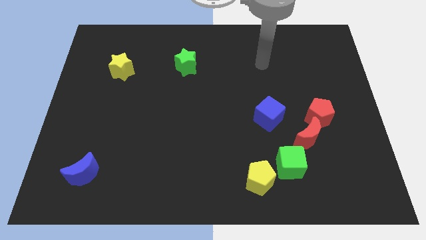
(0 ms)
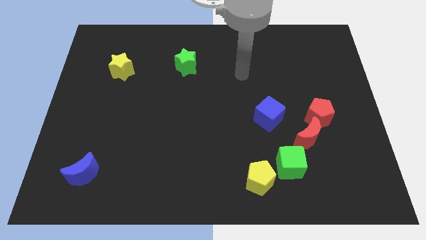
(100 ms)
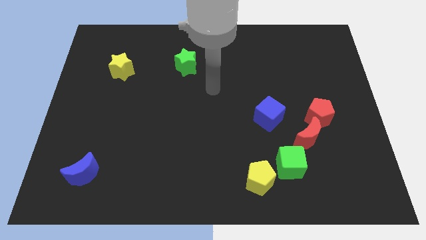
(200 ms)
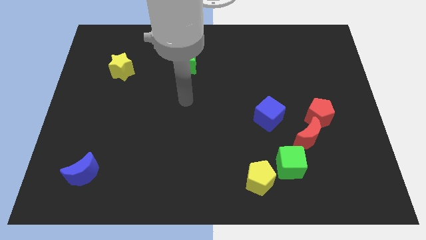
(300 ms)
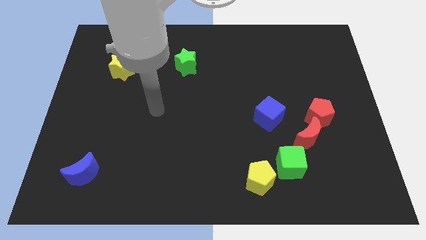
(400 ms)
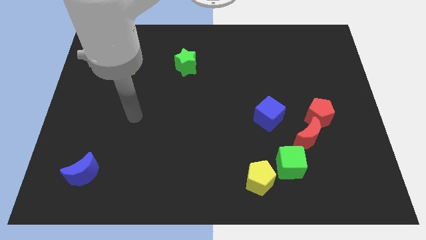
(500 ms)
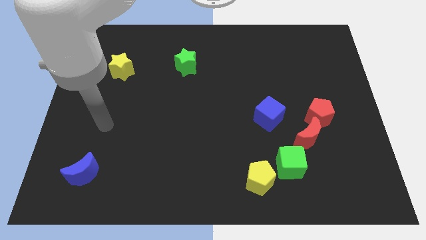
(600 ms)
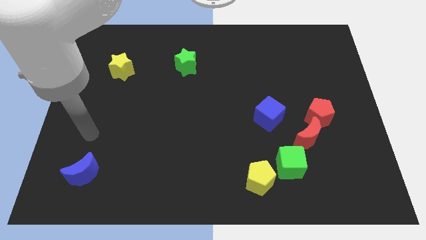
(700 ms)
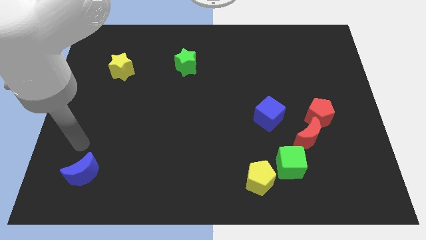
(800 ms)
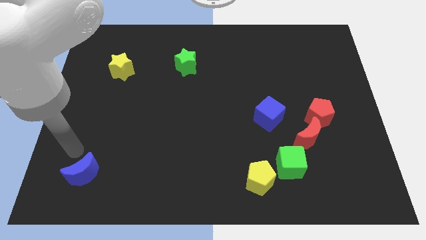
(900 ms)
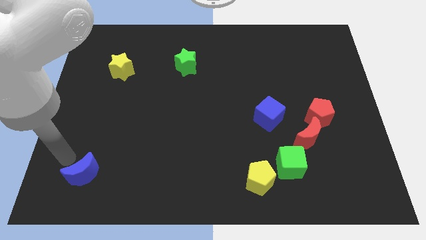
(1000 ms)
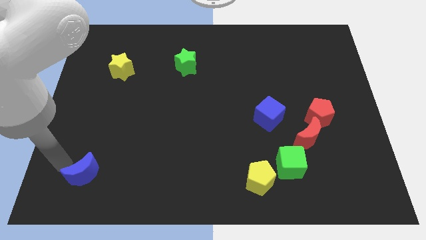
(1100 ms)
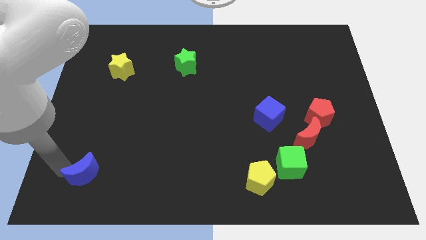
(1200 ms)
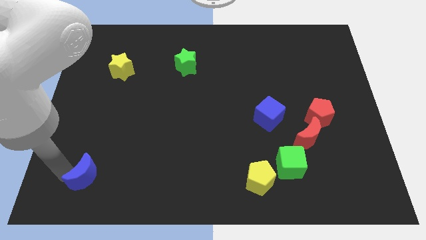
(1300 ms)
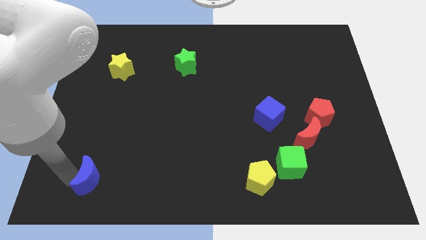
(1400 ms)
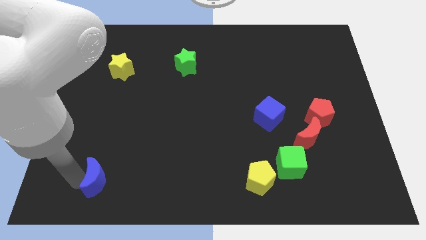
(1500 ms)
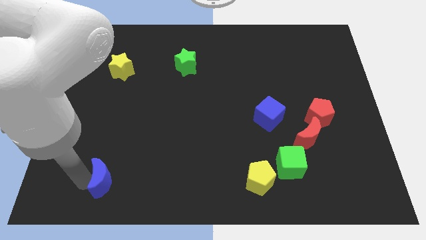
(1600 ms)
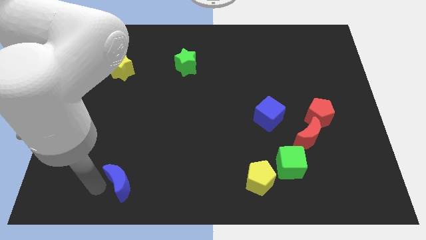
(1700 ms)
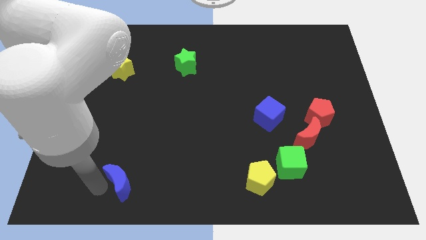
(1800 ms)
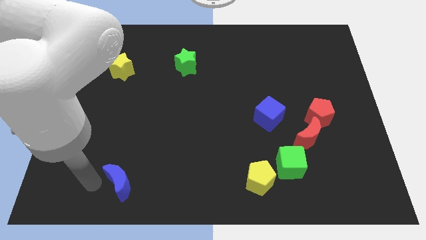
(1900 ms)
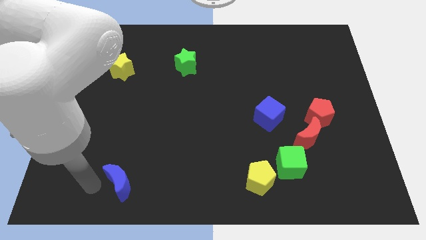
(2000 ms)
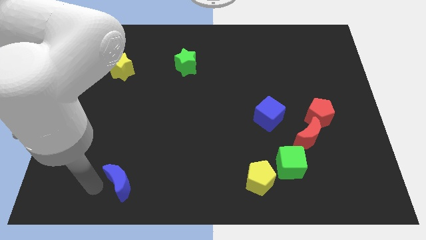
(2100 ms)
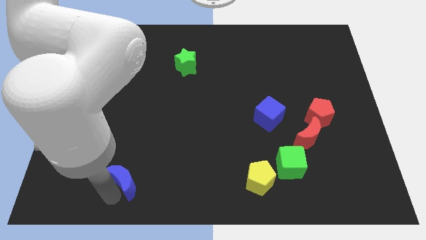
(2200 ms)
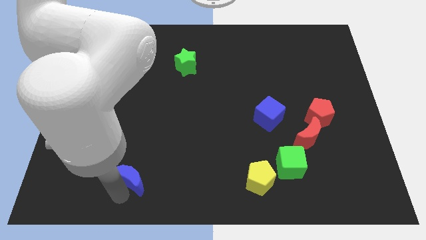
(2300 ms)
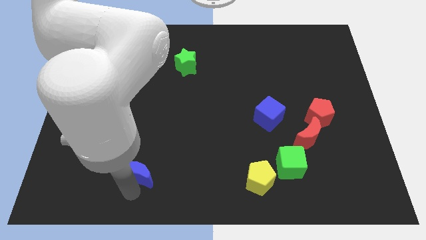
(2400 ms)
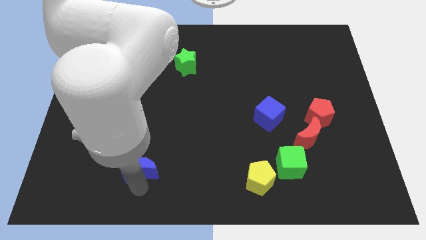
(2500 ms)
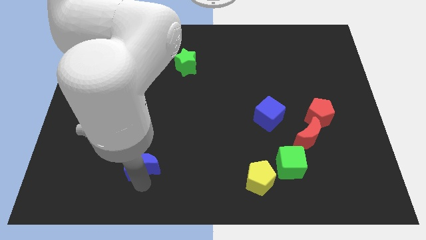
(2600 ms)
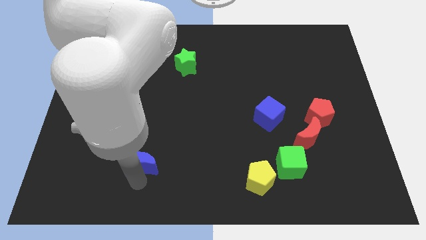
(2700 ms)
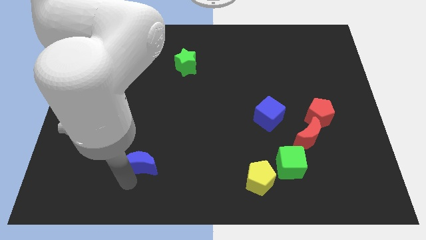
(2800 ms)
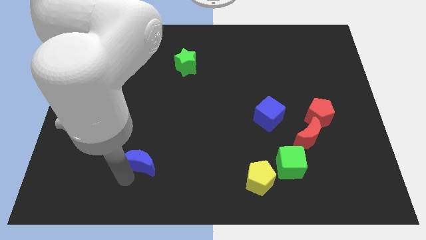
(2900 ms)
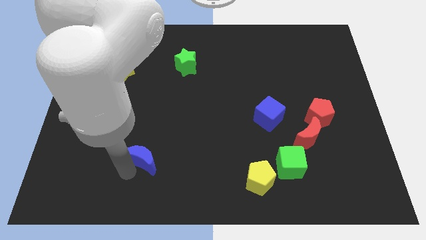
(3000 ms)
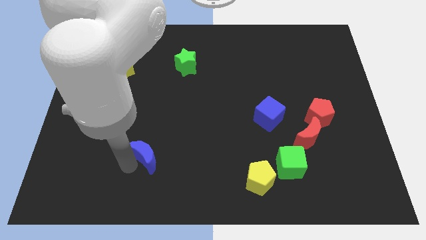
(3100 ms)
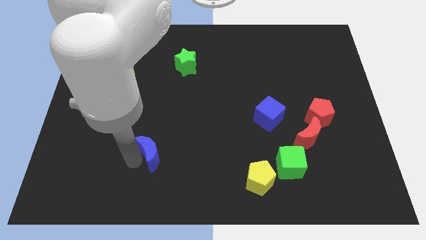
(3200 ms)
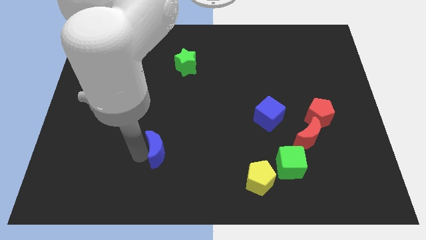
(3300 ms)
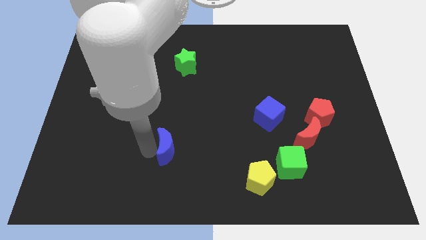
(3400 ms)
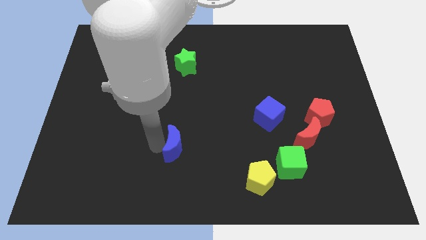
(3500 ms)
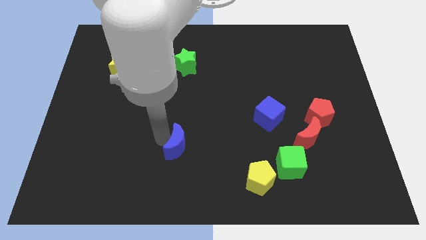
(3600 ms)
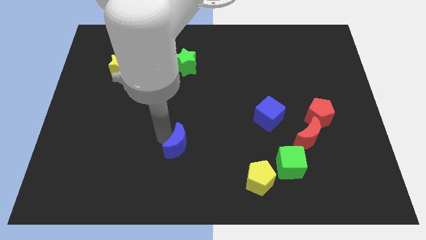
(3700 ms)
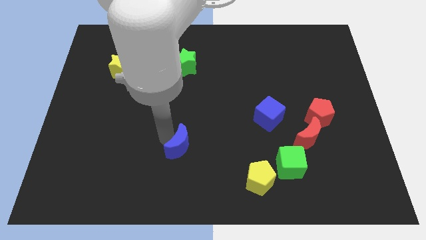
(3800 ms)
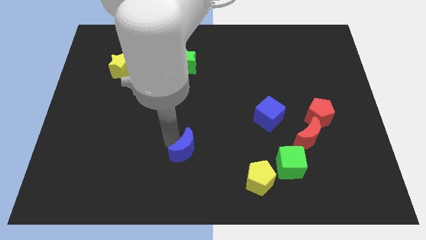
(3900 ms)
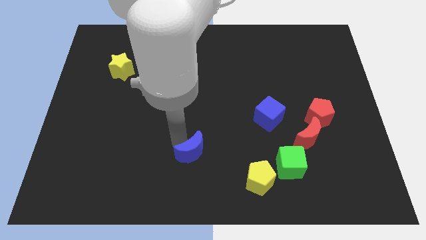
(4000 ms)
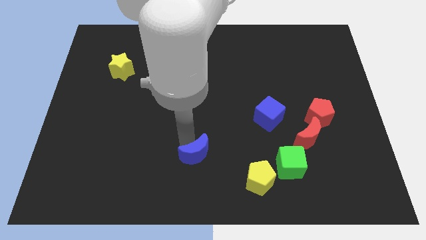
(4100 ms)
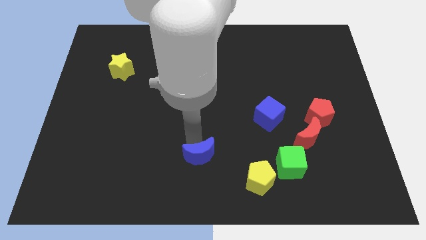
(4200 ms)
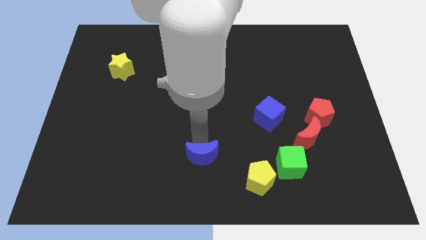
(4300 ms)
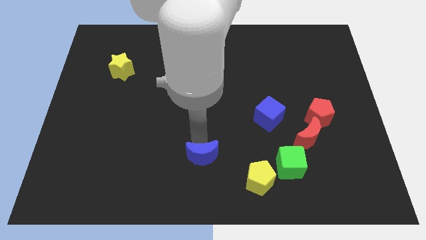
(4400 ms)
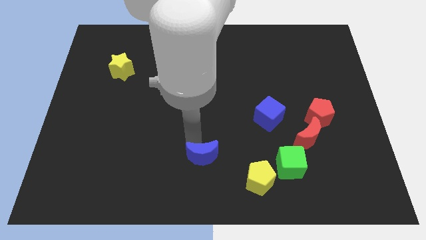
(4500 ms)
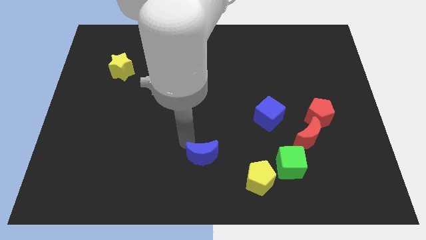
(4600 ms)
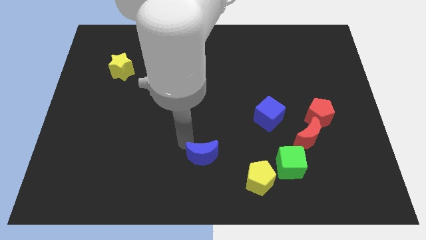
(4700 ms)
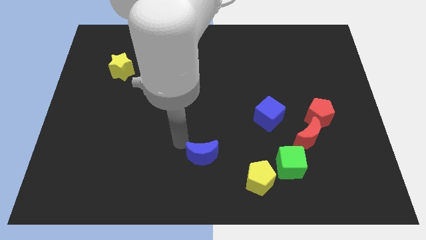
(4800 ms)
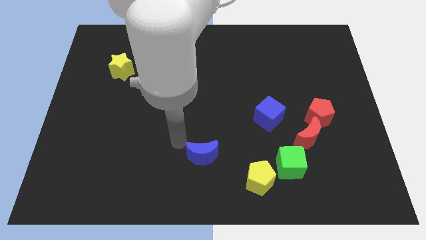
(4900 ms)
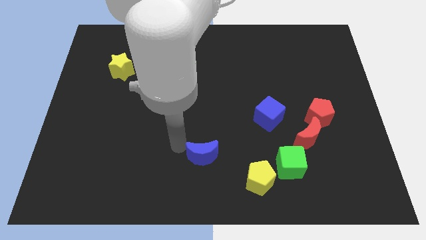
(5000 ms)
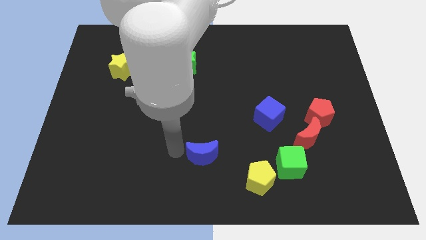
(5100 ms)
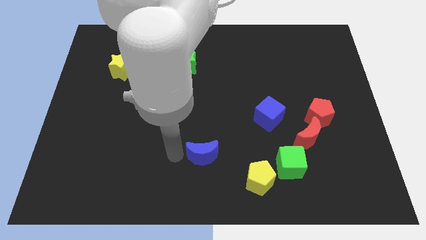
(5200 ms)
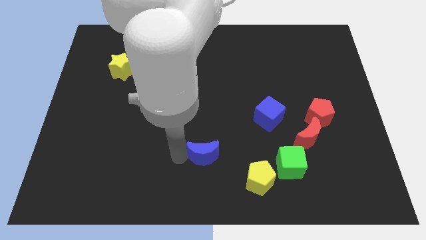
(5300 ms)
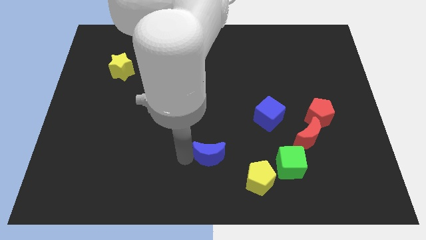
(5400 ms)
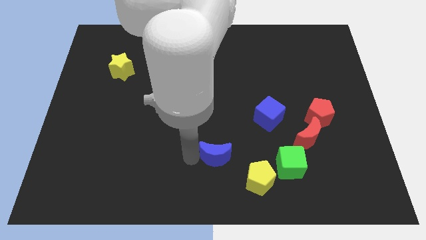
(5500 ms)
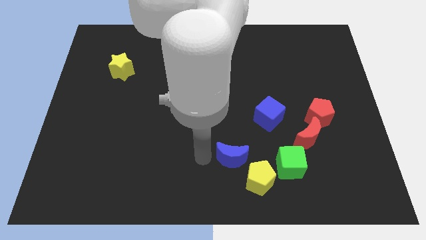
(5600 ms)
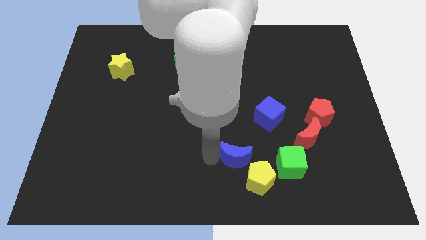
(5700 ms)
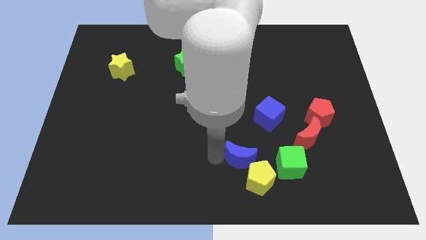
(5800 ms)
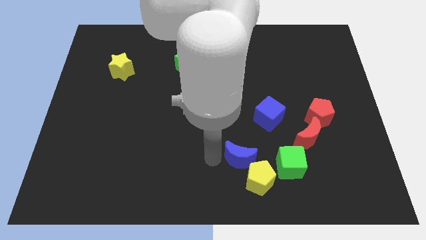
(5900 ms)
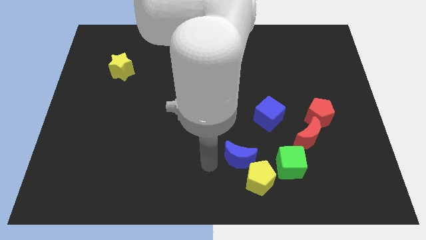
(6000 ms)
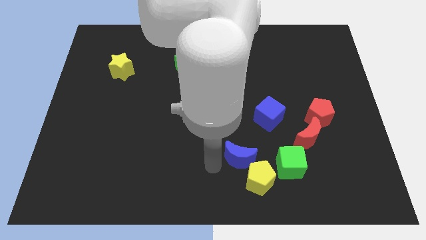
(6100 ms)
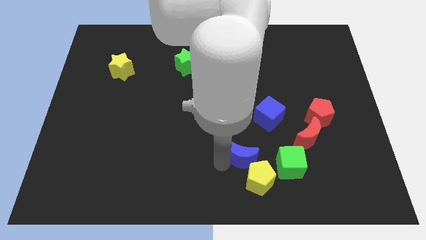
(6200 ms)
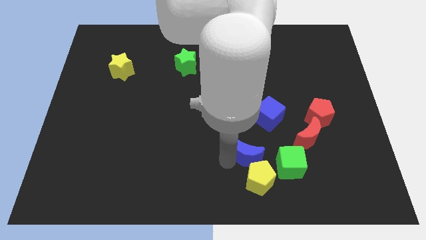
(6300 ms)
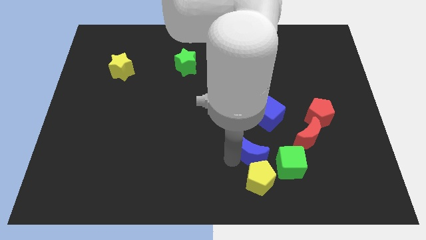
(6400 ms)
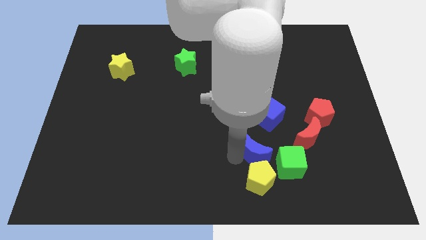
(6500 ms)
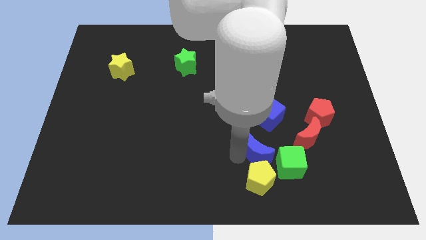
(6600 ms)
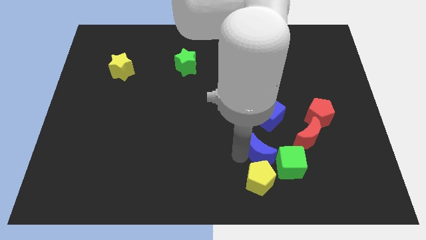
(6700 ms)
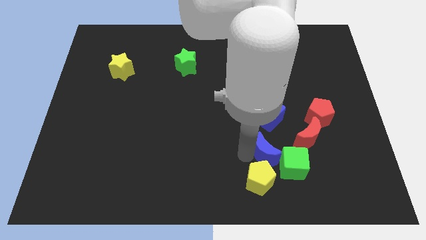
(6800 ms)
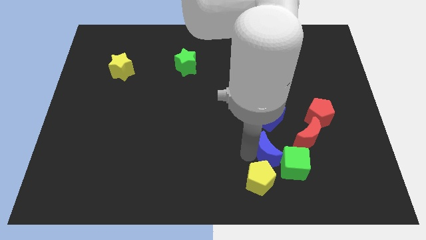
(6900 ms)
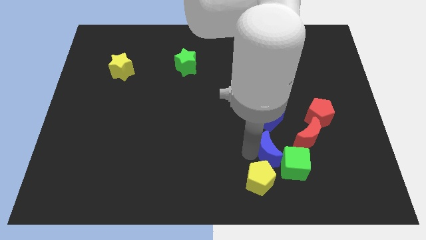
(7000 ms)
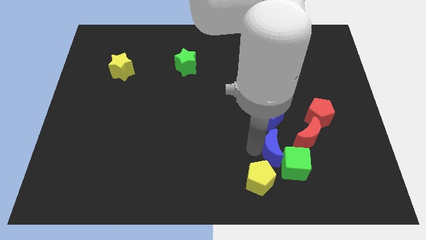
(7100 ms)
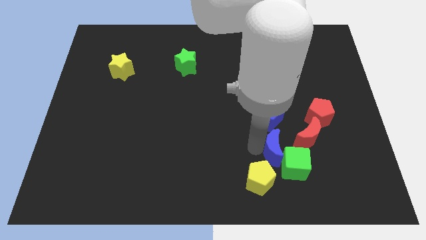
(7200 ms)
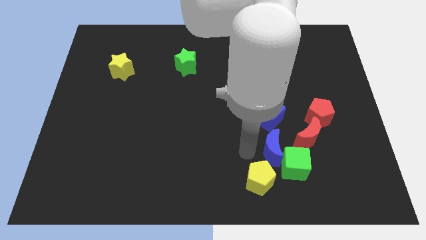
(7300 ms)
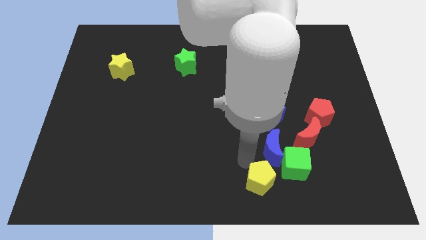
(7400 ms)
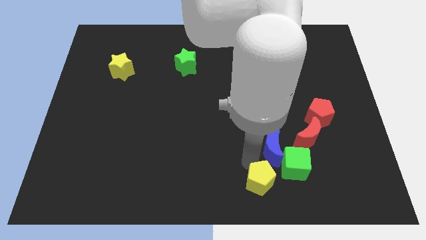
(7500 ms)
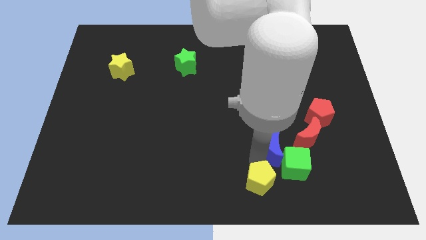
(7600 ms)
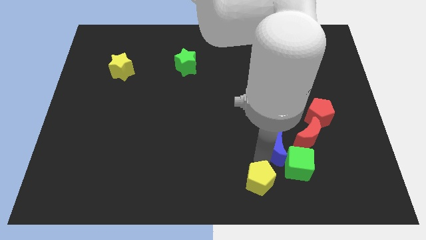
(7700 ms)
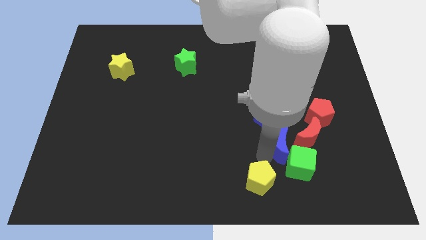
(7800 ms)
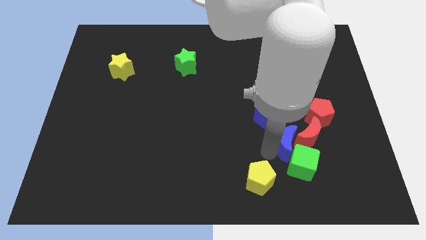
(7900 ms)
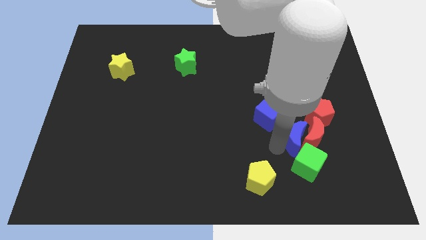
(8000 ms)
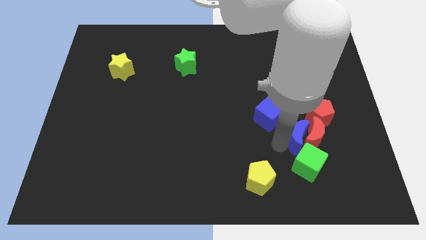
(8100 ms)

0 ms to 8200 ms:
slide the blue moon next to the red moon
